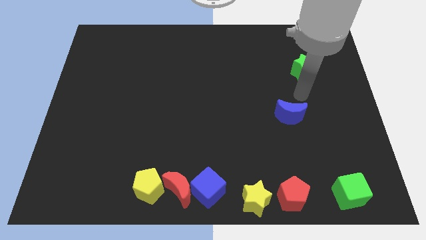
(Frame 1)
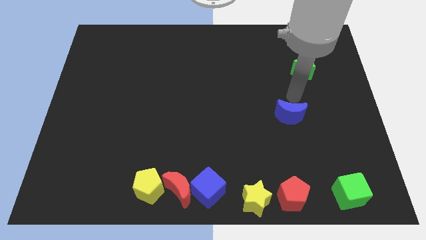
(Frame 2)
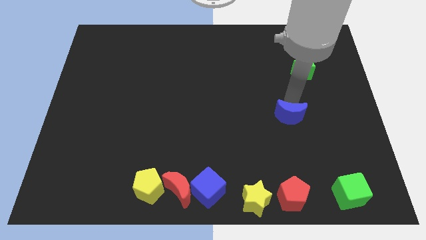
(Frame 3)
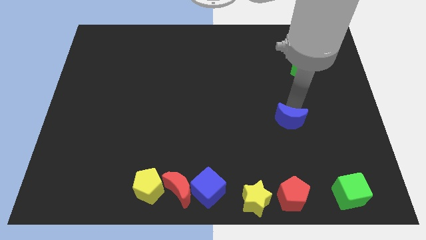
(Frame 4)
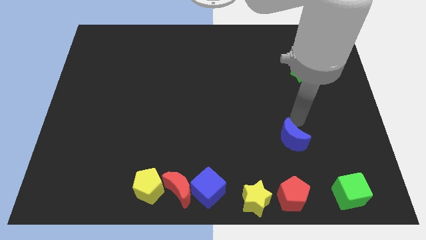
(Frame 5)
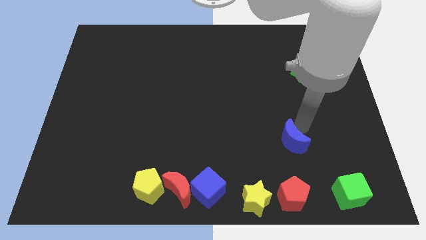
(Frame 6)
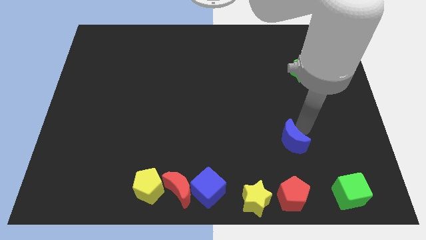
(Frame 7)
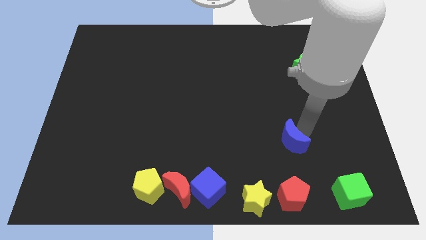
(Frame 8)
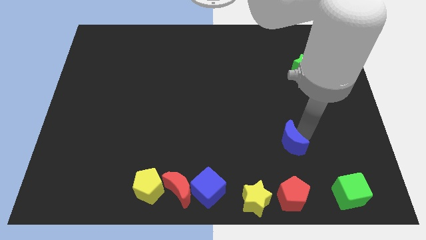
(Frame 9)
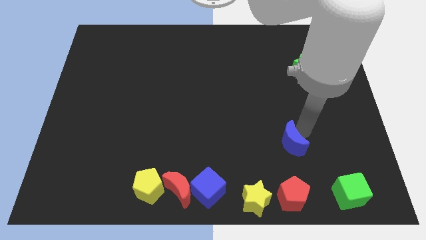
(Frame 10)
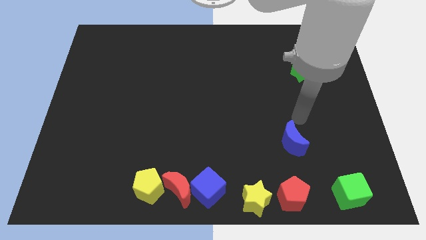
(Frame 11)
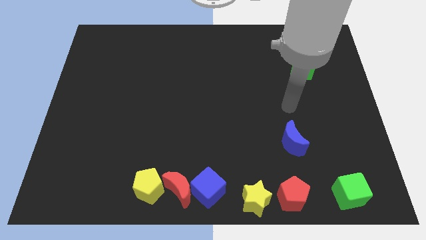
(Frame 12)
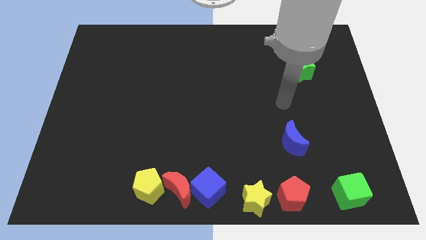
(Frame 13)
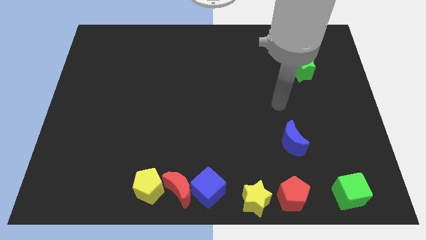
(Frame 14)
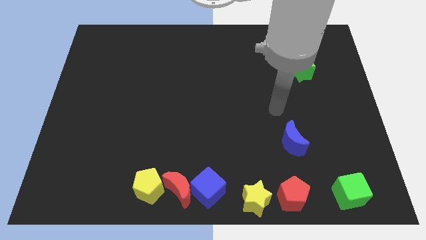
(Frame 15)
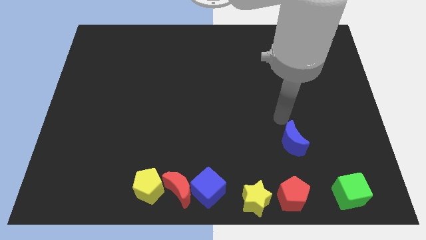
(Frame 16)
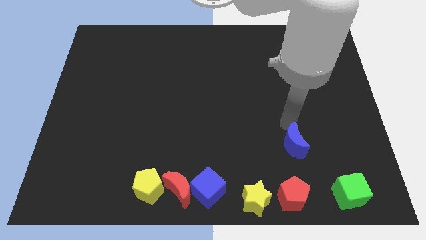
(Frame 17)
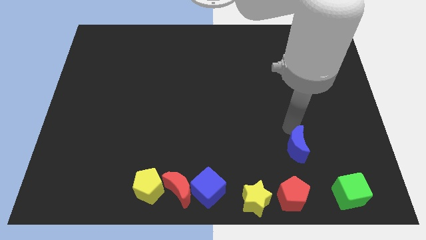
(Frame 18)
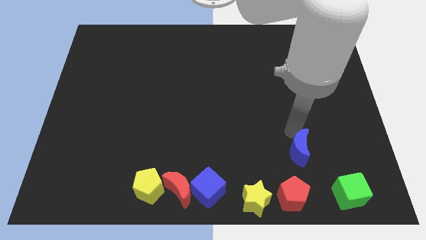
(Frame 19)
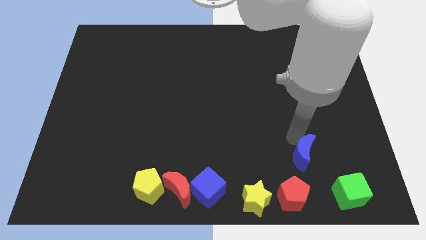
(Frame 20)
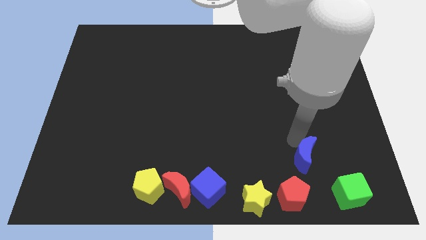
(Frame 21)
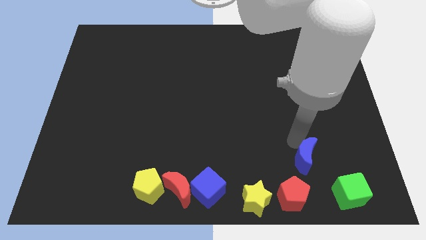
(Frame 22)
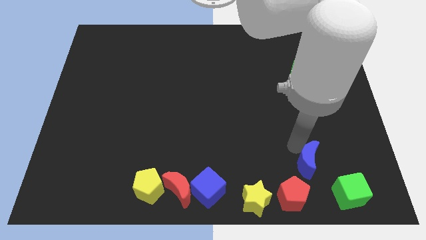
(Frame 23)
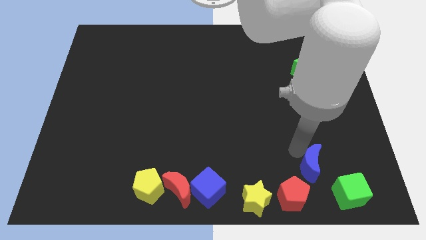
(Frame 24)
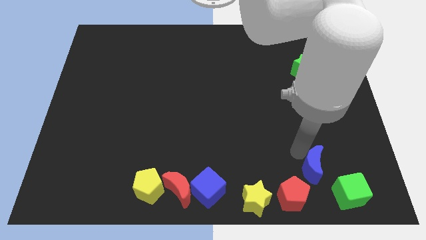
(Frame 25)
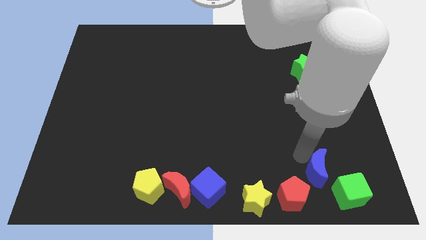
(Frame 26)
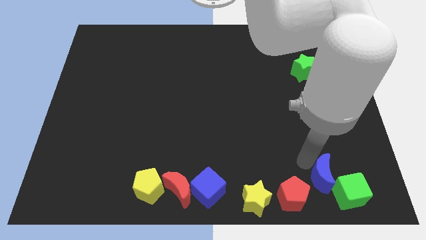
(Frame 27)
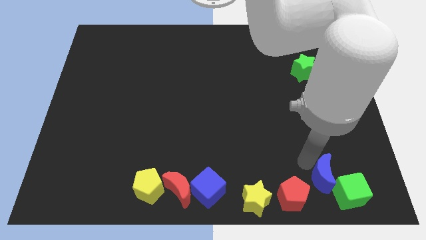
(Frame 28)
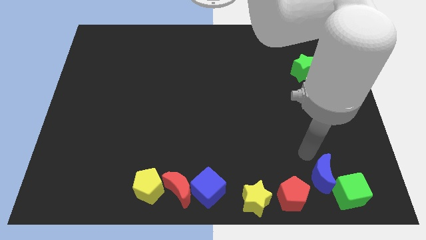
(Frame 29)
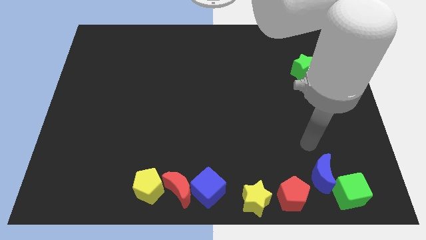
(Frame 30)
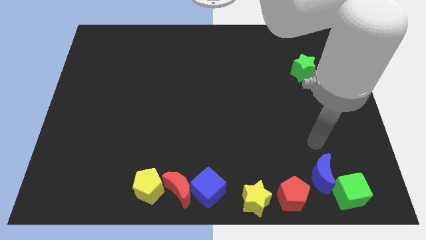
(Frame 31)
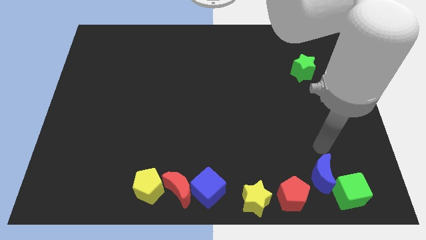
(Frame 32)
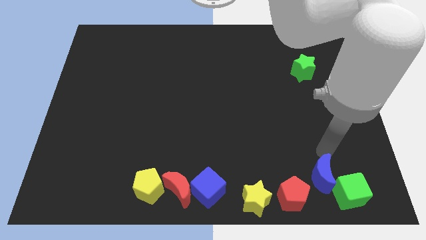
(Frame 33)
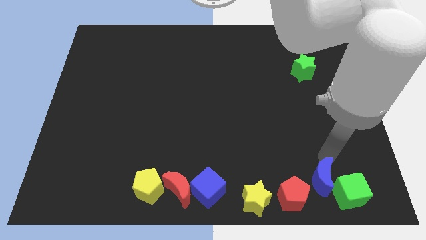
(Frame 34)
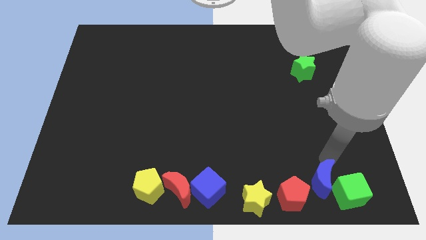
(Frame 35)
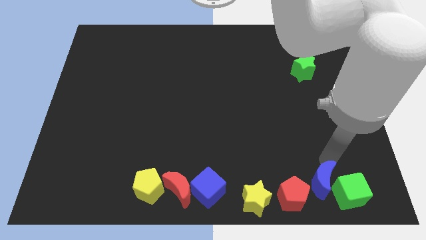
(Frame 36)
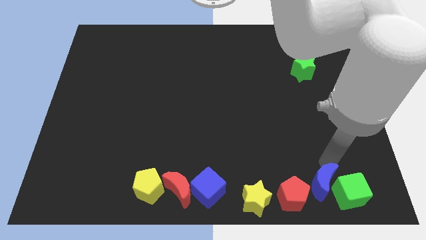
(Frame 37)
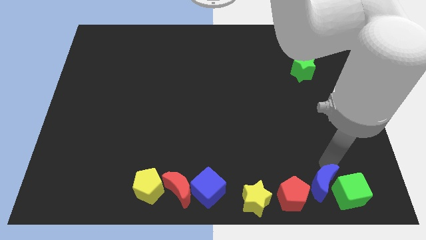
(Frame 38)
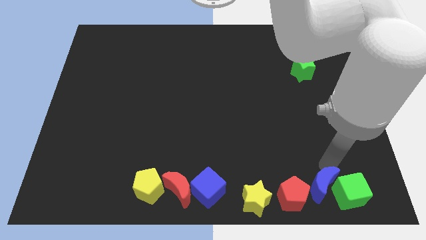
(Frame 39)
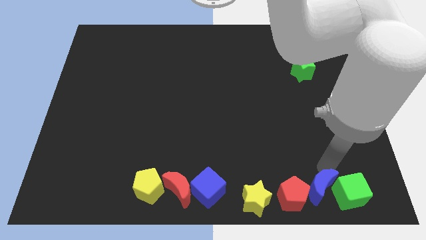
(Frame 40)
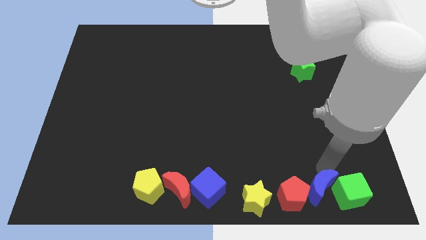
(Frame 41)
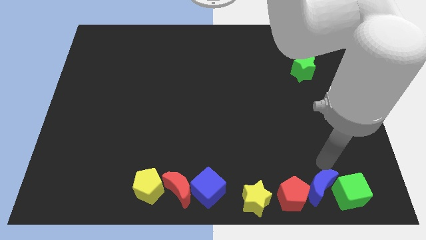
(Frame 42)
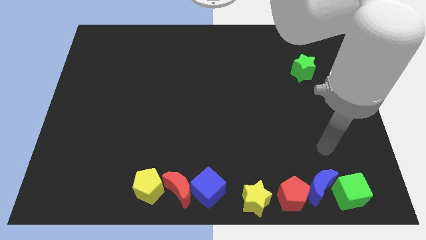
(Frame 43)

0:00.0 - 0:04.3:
move the blue moon right to the red pentagon

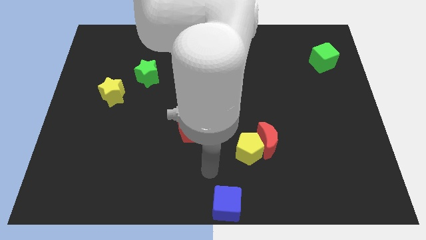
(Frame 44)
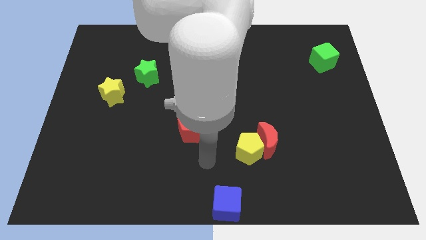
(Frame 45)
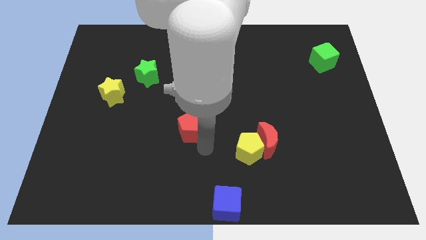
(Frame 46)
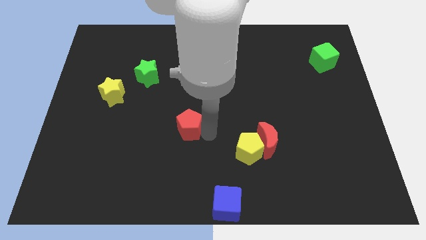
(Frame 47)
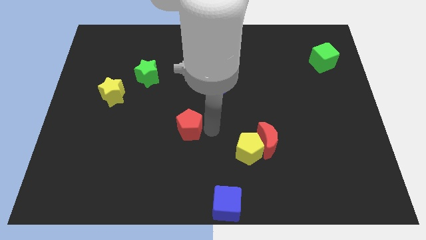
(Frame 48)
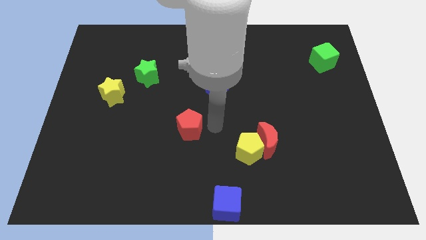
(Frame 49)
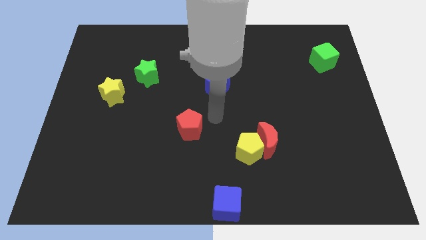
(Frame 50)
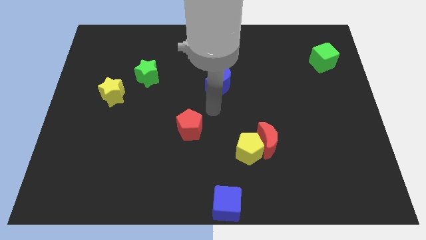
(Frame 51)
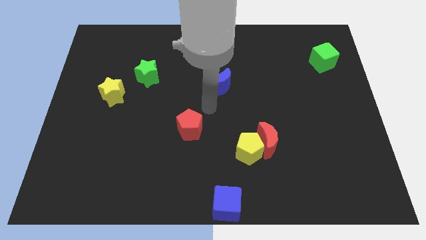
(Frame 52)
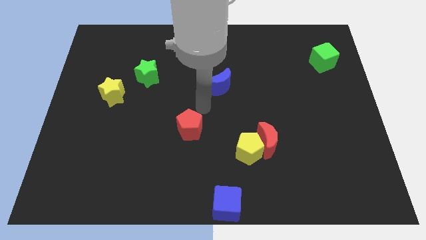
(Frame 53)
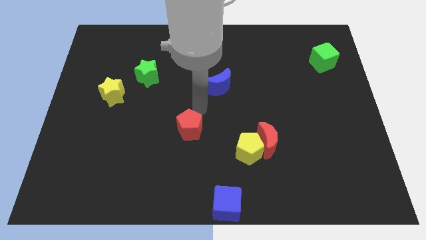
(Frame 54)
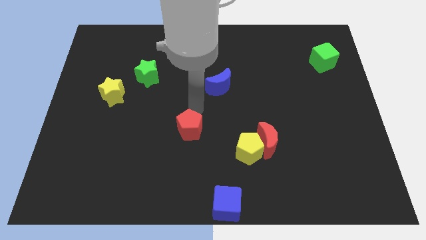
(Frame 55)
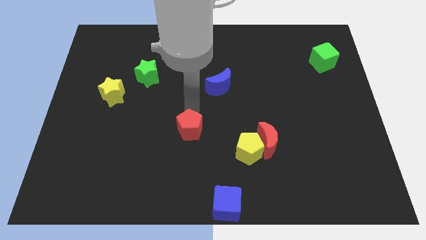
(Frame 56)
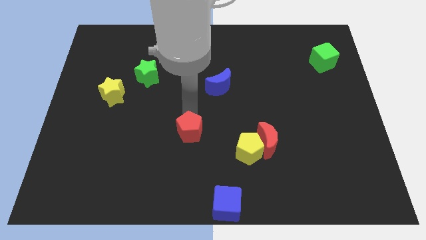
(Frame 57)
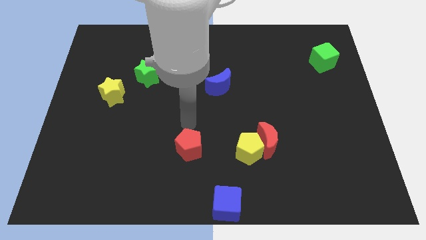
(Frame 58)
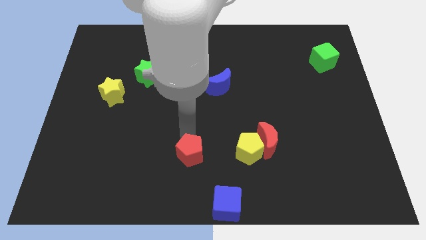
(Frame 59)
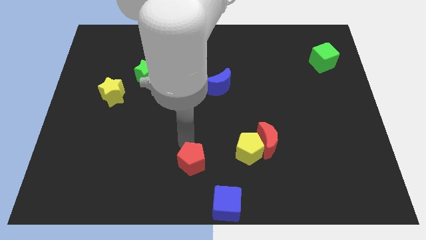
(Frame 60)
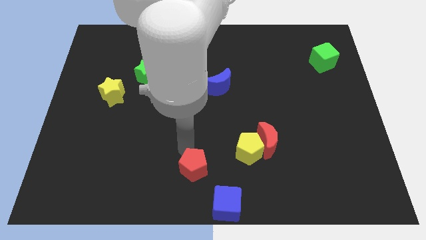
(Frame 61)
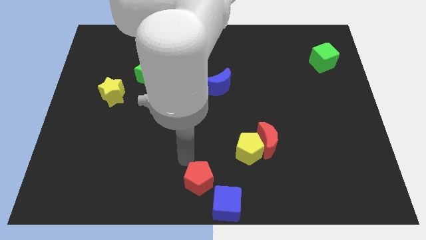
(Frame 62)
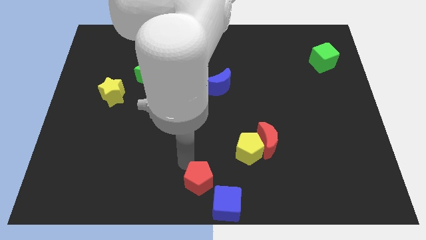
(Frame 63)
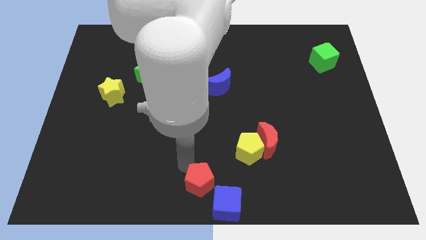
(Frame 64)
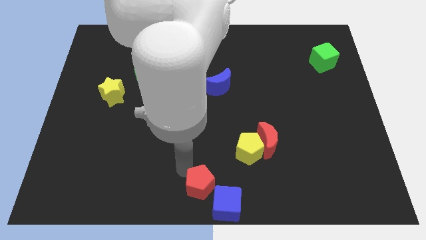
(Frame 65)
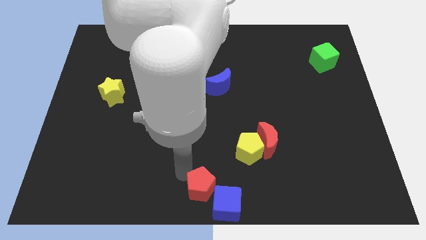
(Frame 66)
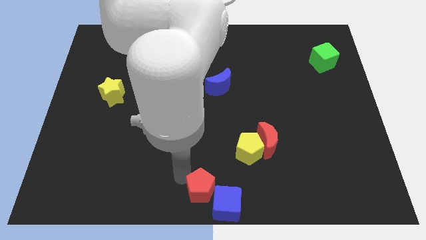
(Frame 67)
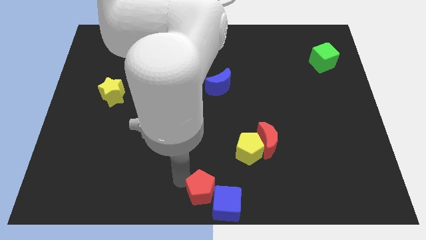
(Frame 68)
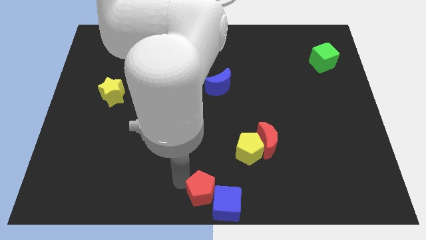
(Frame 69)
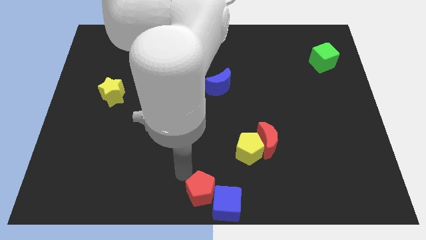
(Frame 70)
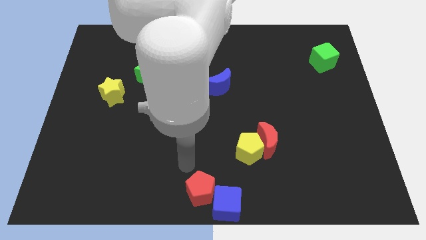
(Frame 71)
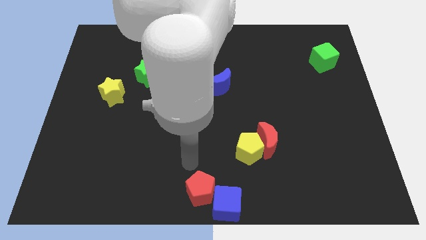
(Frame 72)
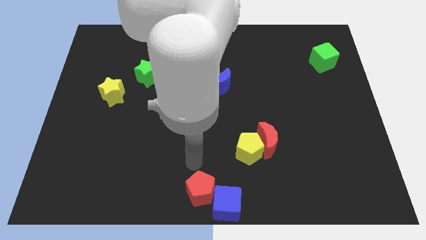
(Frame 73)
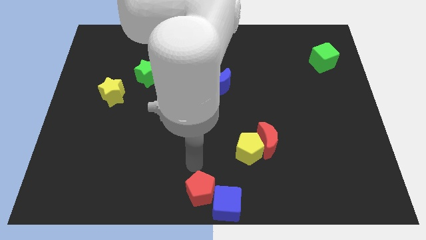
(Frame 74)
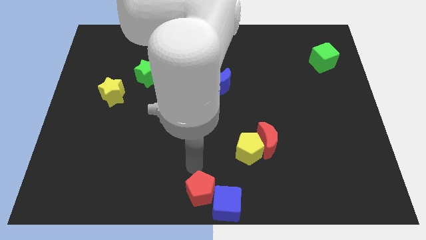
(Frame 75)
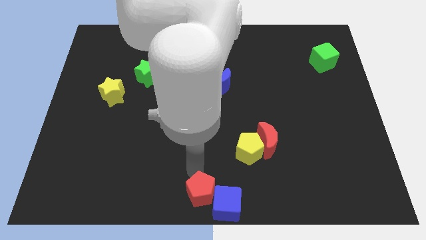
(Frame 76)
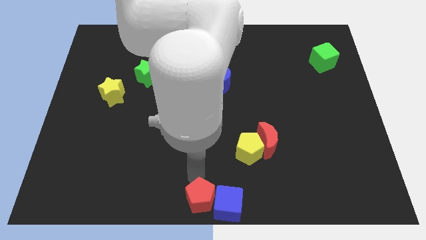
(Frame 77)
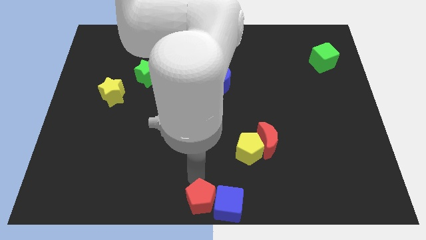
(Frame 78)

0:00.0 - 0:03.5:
push the red pentagon into the blue cube

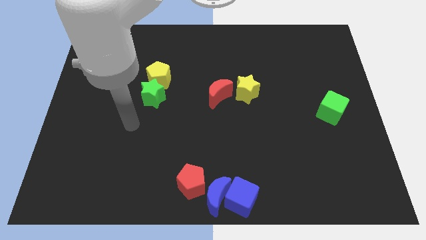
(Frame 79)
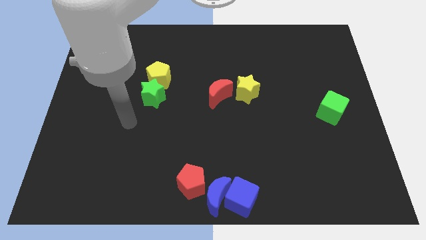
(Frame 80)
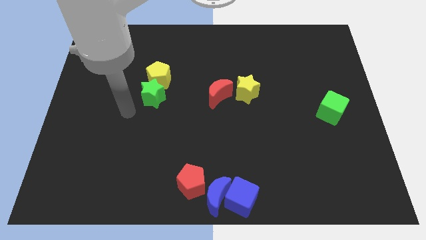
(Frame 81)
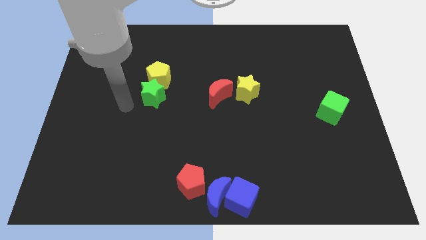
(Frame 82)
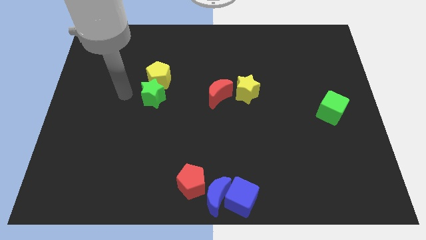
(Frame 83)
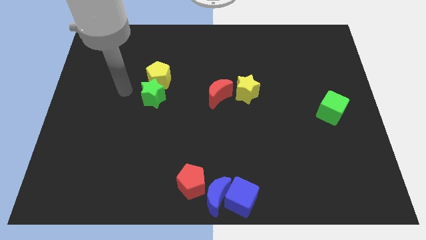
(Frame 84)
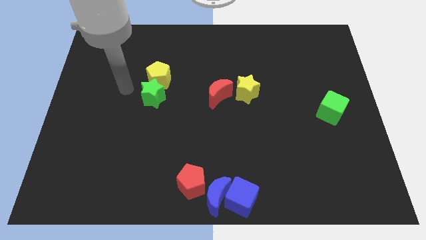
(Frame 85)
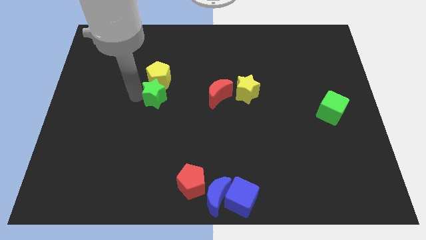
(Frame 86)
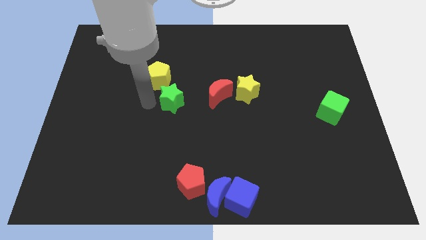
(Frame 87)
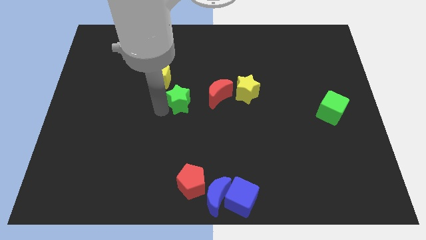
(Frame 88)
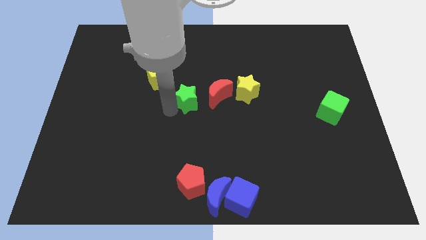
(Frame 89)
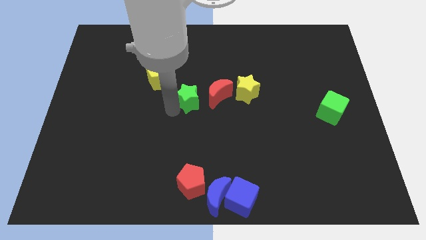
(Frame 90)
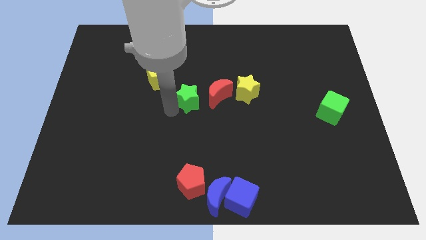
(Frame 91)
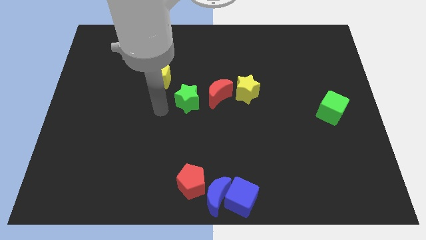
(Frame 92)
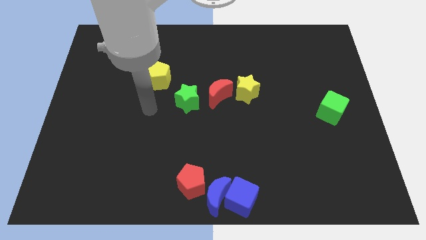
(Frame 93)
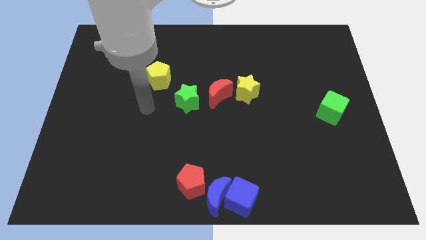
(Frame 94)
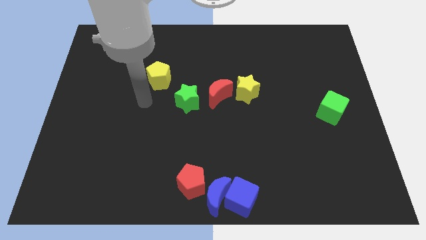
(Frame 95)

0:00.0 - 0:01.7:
slide the green star at the left side of the red moon
